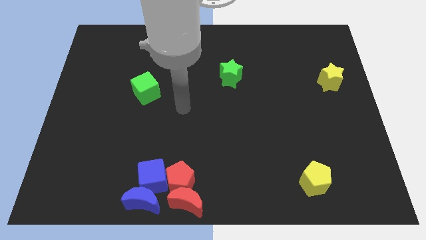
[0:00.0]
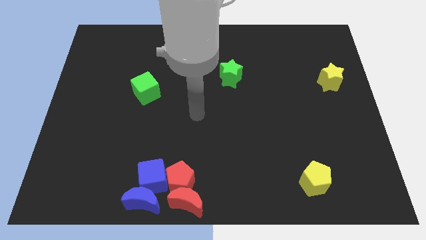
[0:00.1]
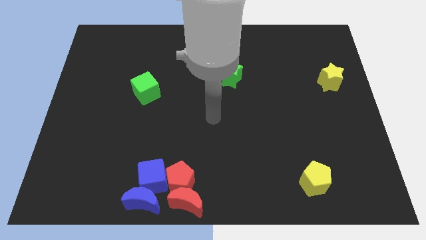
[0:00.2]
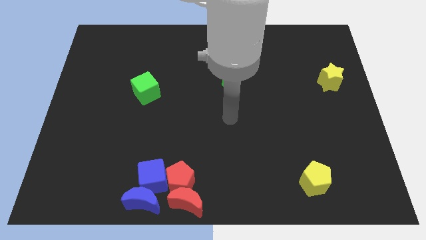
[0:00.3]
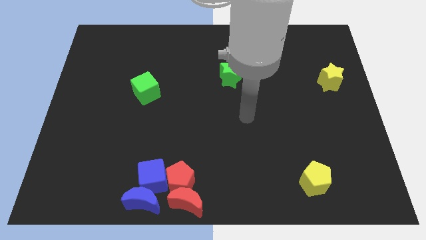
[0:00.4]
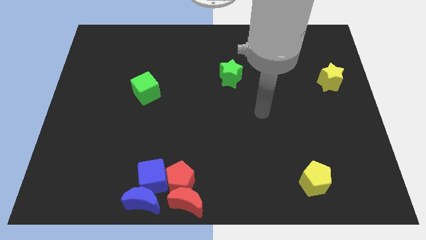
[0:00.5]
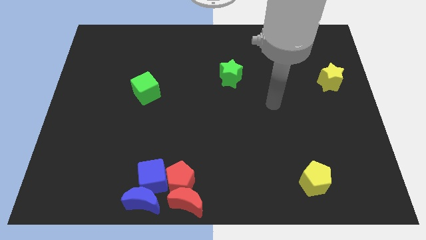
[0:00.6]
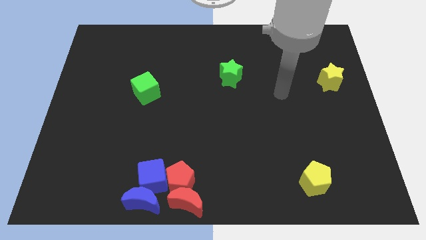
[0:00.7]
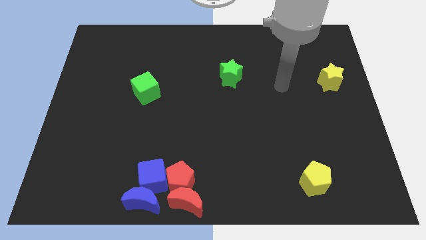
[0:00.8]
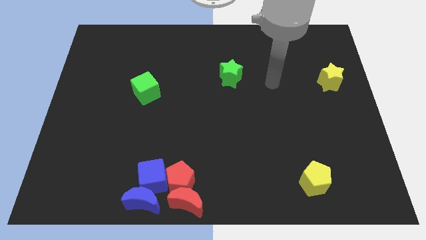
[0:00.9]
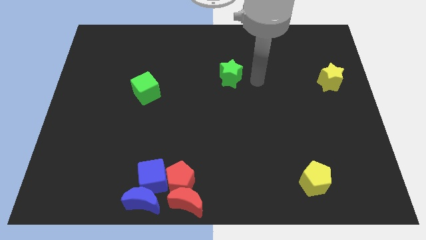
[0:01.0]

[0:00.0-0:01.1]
move the arm towards the right side of the green star

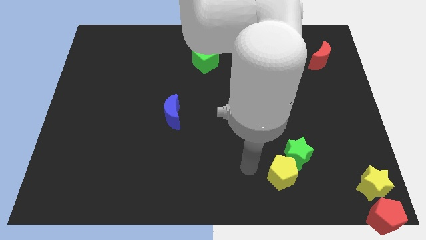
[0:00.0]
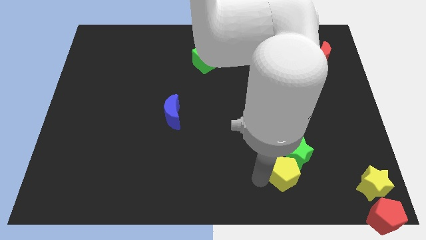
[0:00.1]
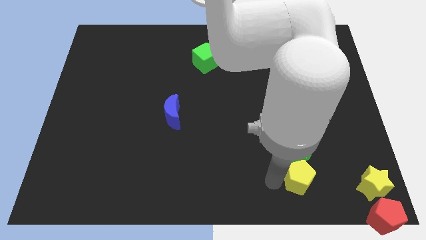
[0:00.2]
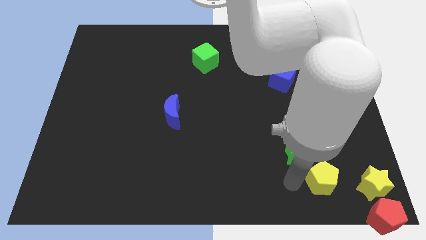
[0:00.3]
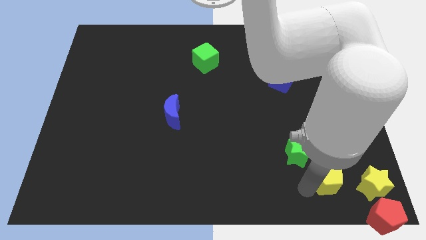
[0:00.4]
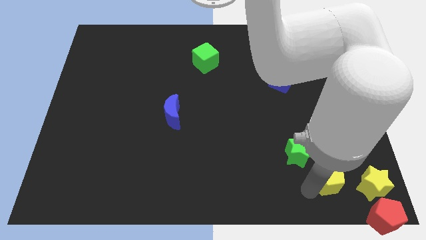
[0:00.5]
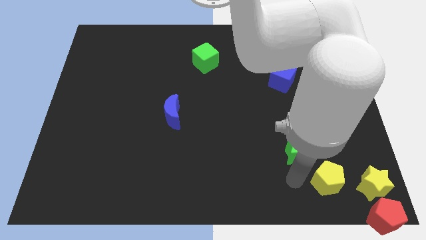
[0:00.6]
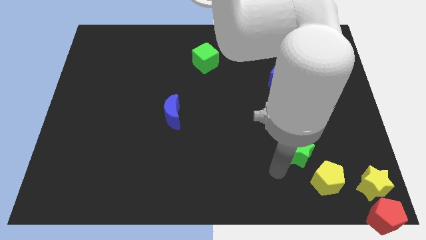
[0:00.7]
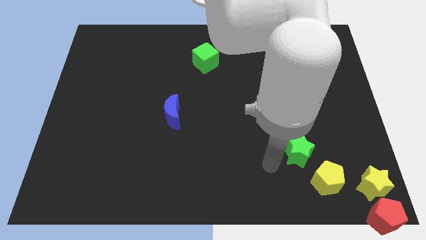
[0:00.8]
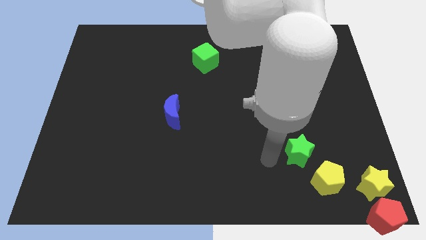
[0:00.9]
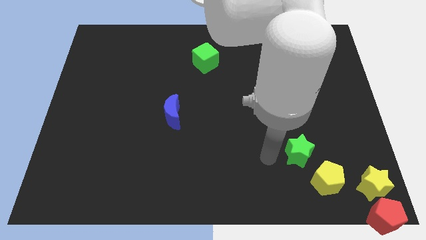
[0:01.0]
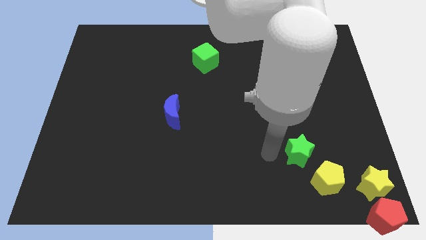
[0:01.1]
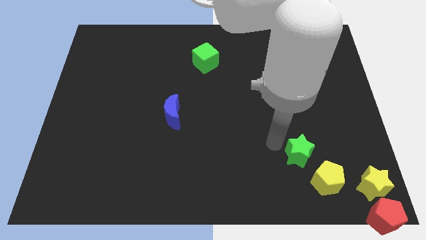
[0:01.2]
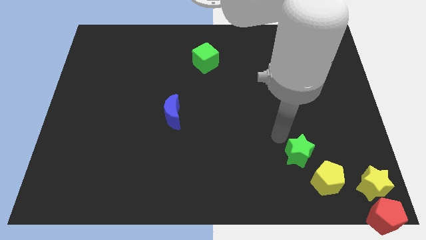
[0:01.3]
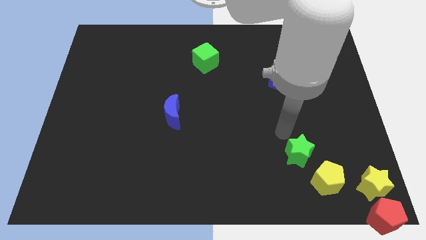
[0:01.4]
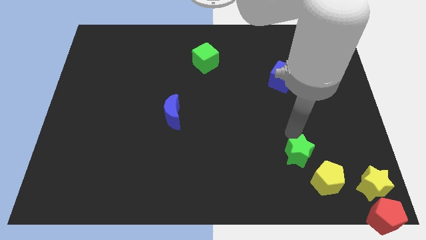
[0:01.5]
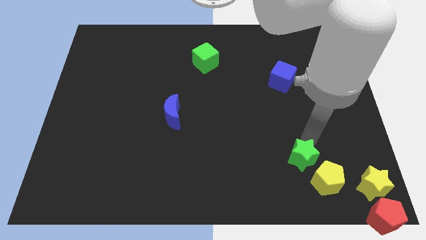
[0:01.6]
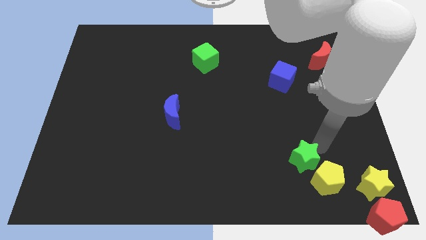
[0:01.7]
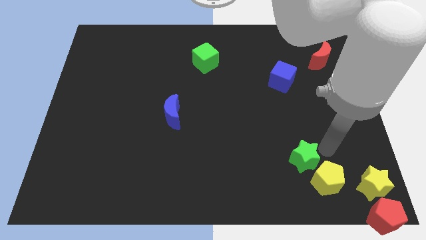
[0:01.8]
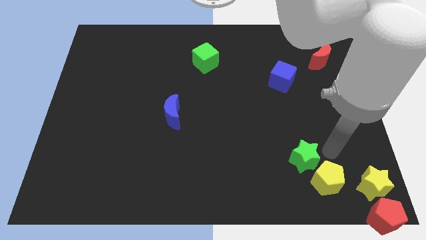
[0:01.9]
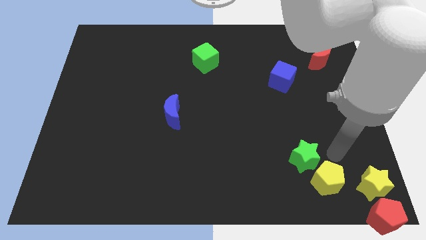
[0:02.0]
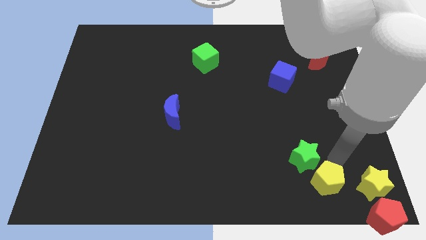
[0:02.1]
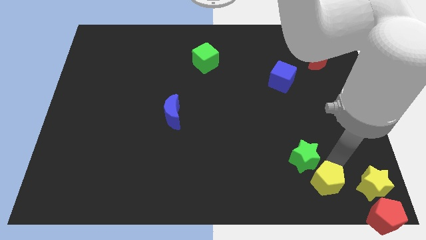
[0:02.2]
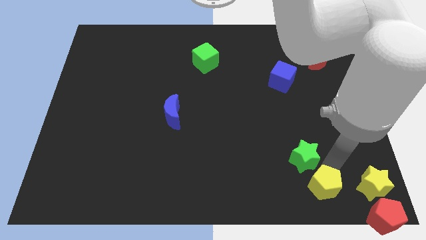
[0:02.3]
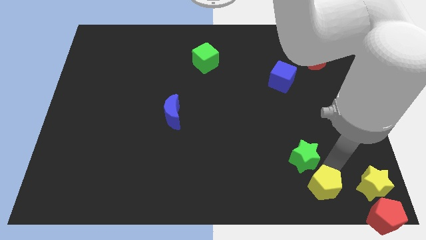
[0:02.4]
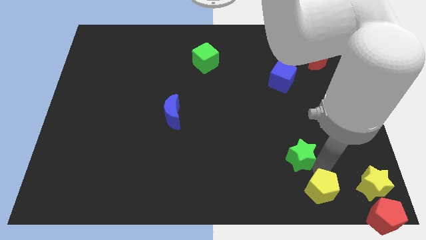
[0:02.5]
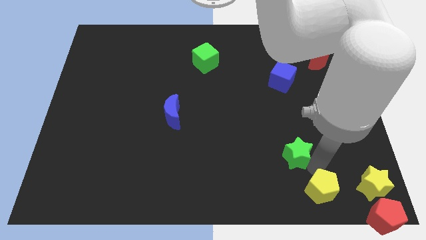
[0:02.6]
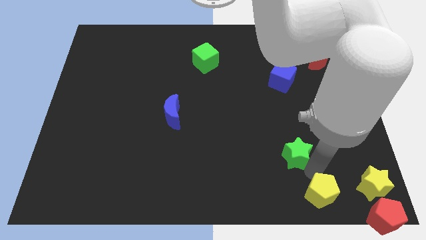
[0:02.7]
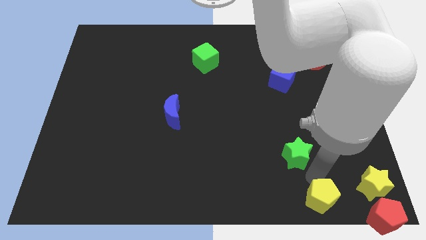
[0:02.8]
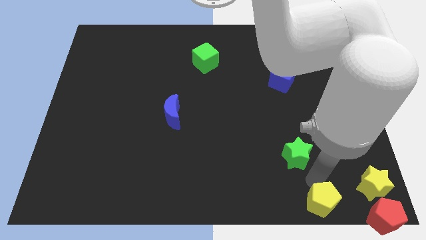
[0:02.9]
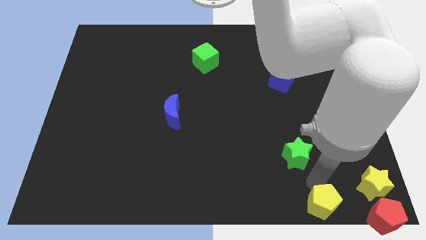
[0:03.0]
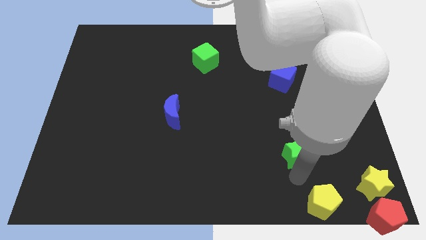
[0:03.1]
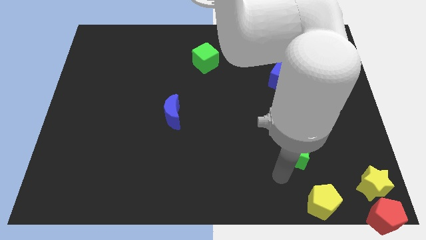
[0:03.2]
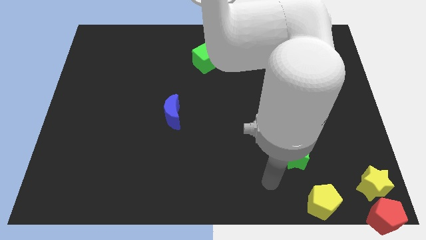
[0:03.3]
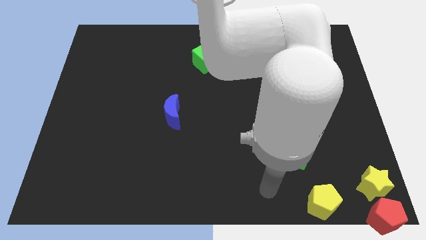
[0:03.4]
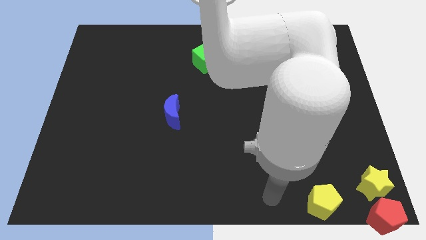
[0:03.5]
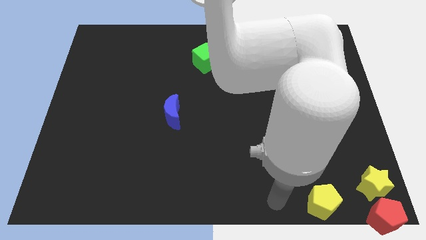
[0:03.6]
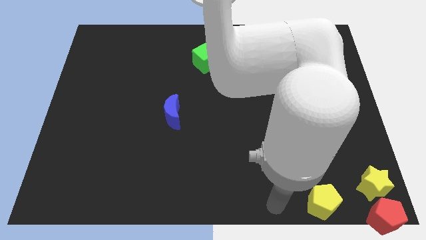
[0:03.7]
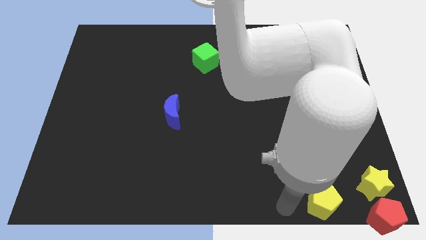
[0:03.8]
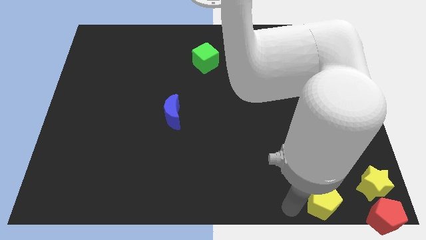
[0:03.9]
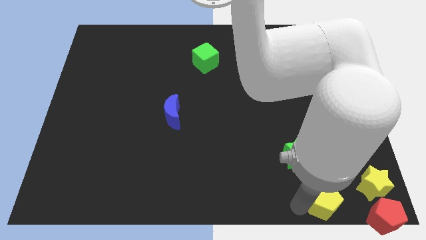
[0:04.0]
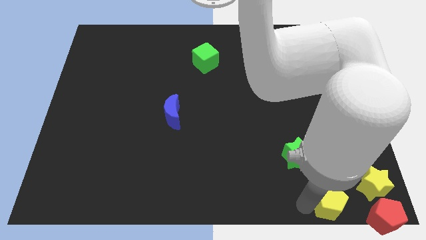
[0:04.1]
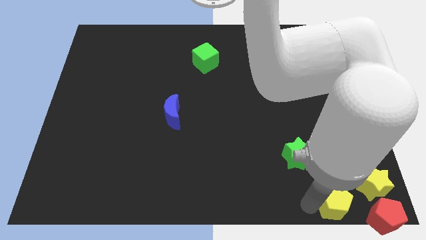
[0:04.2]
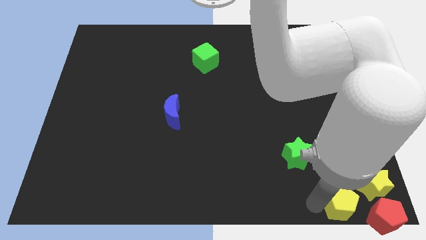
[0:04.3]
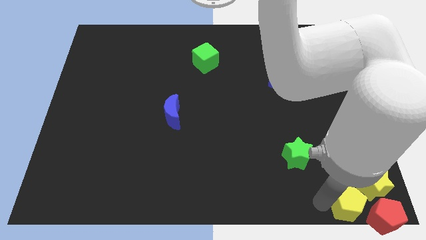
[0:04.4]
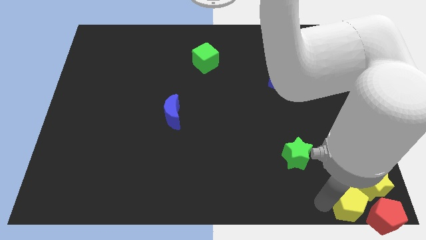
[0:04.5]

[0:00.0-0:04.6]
separate the yellow pentagon from the green star

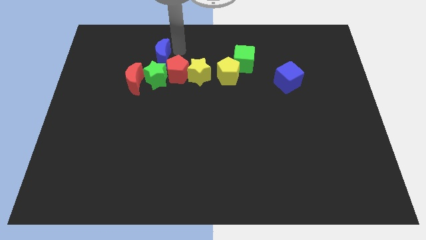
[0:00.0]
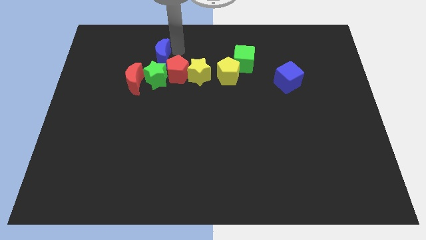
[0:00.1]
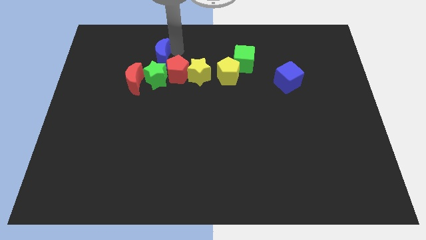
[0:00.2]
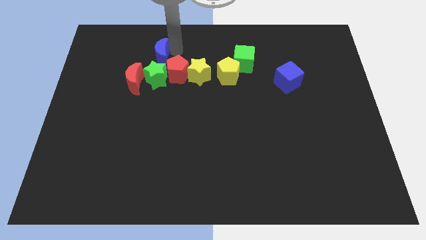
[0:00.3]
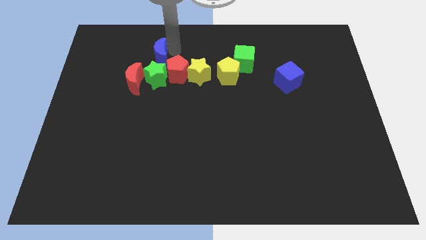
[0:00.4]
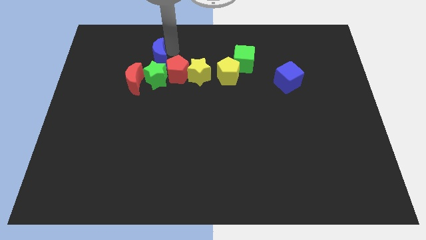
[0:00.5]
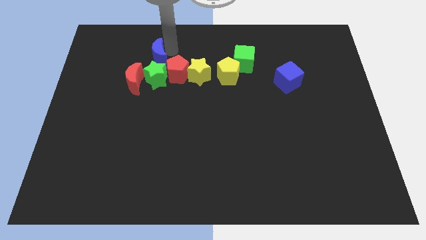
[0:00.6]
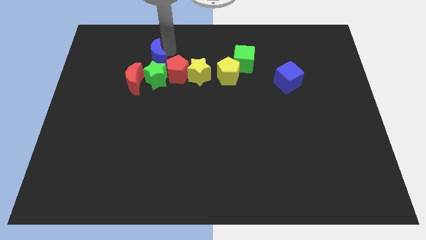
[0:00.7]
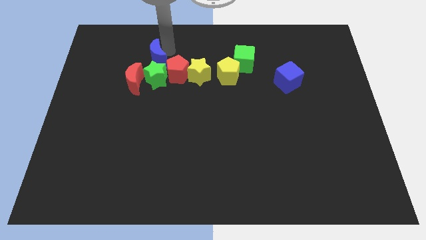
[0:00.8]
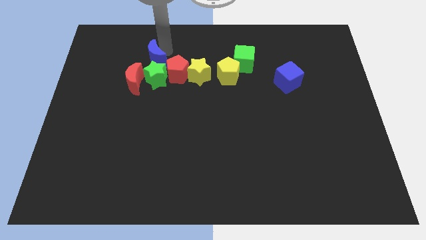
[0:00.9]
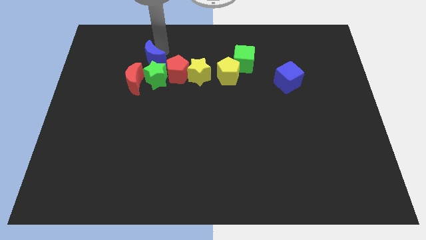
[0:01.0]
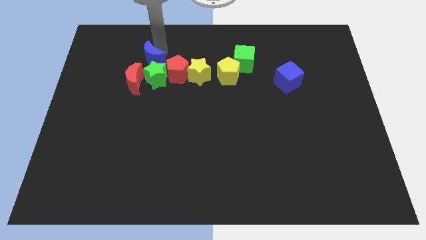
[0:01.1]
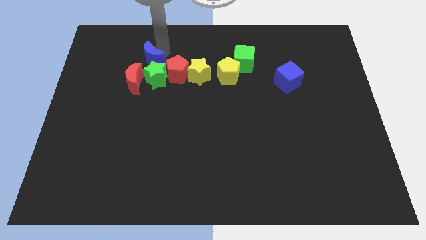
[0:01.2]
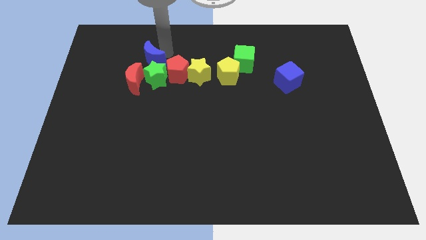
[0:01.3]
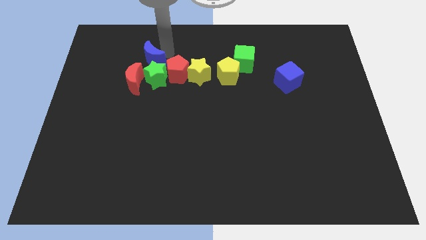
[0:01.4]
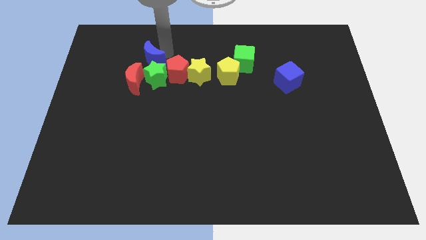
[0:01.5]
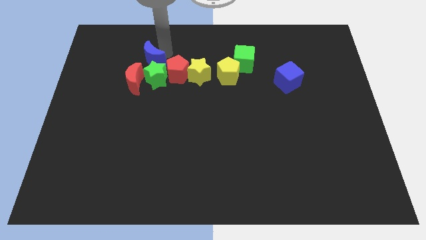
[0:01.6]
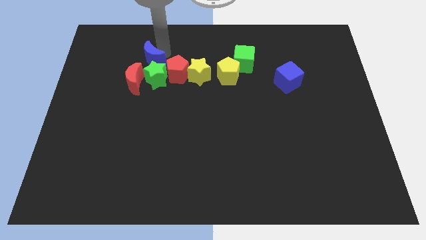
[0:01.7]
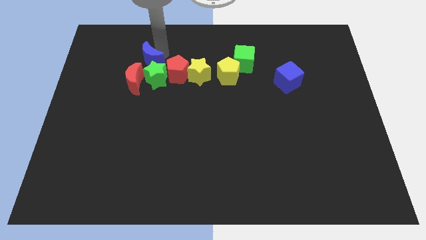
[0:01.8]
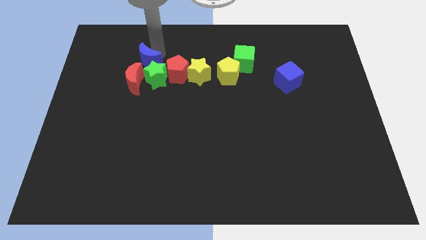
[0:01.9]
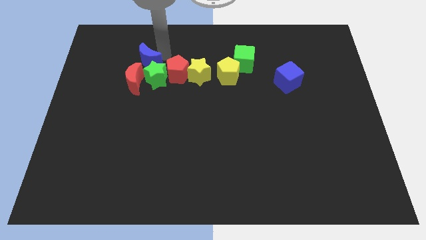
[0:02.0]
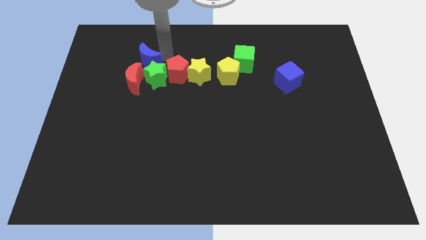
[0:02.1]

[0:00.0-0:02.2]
move blue moon to the left

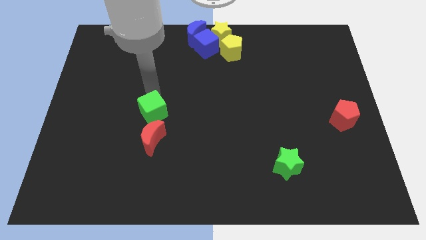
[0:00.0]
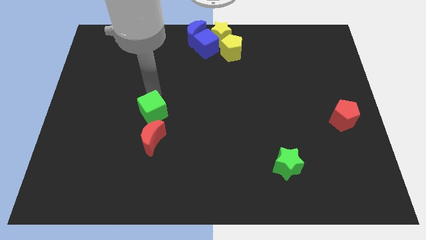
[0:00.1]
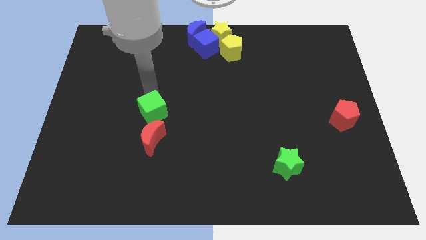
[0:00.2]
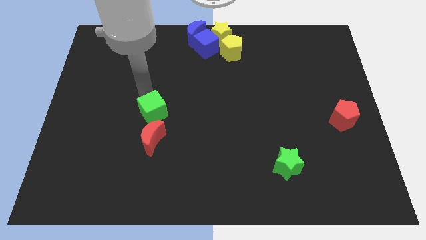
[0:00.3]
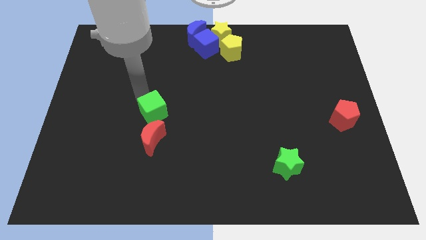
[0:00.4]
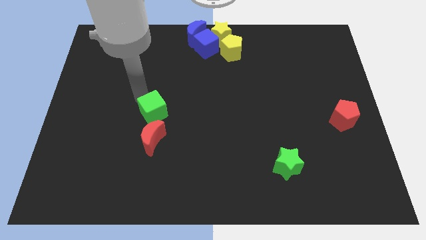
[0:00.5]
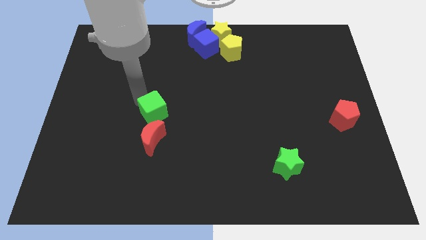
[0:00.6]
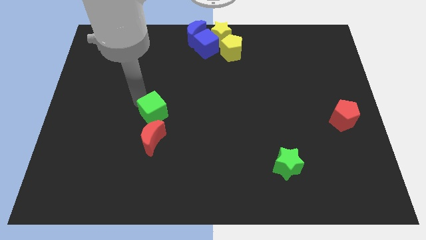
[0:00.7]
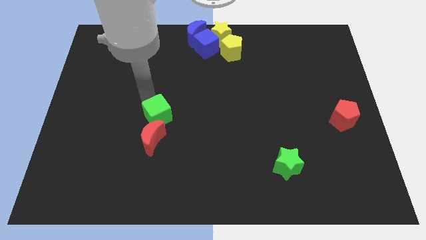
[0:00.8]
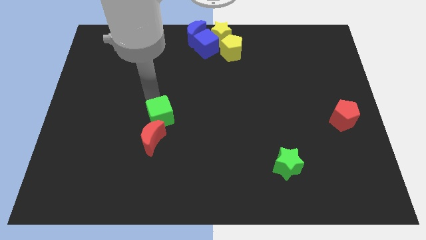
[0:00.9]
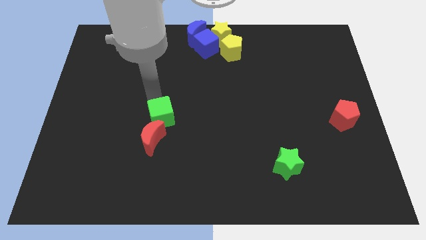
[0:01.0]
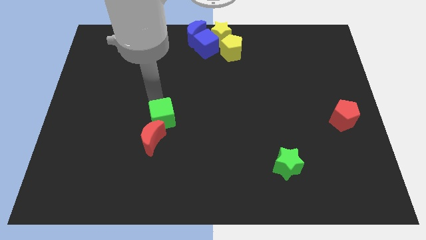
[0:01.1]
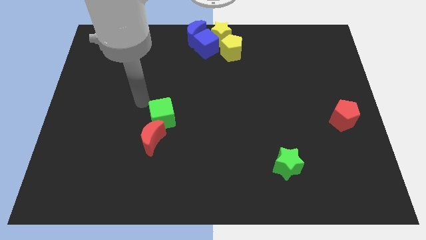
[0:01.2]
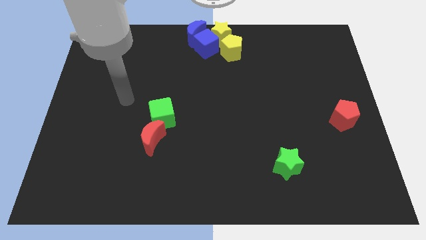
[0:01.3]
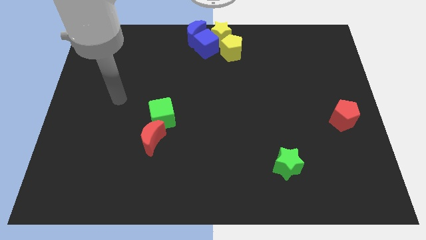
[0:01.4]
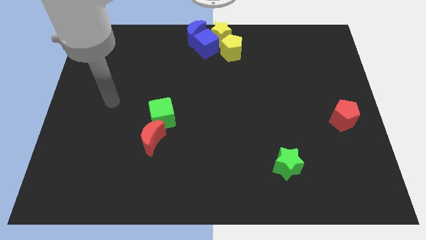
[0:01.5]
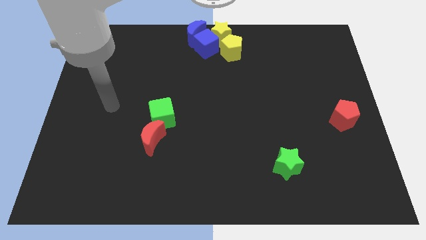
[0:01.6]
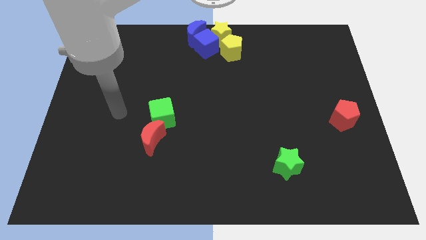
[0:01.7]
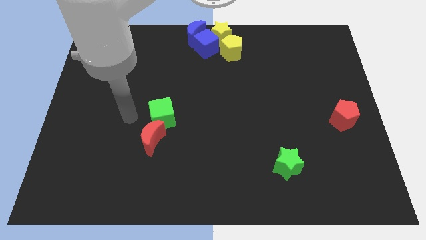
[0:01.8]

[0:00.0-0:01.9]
push green cube above the red crescent
